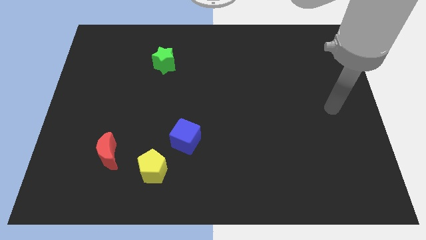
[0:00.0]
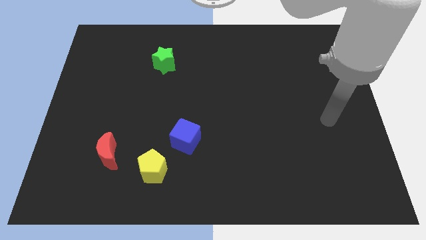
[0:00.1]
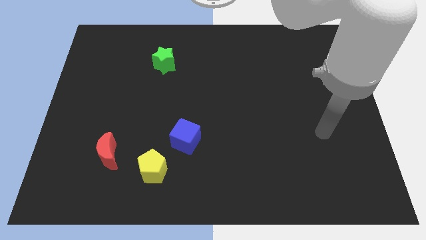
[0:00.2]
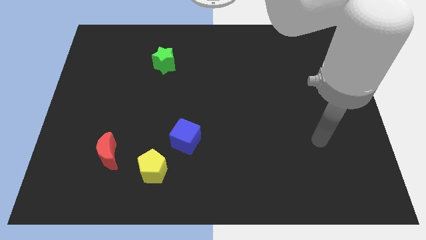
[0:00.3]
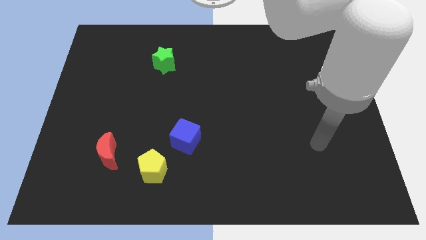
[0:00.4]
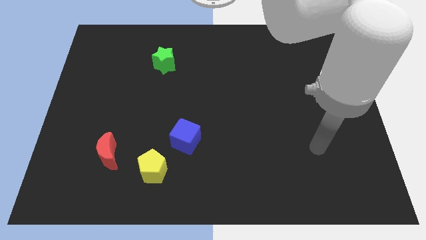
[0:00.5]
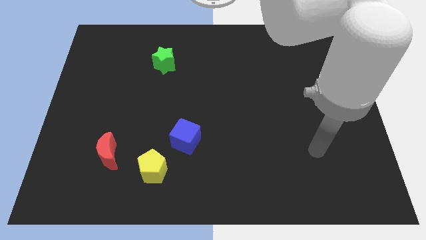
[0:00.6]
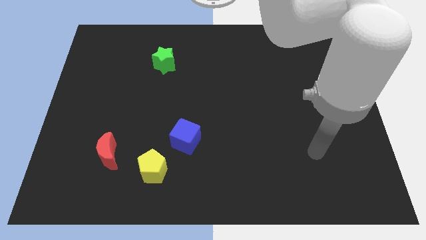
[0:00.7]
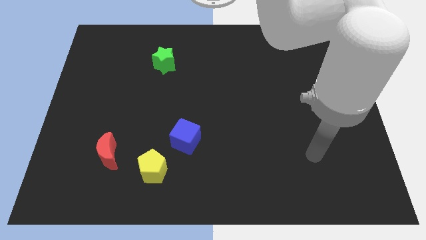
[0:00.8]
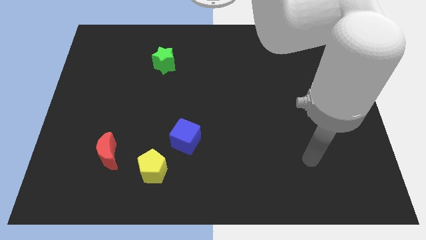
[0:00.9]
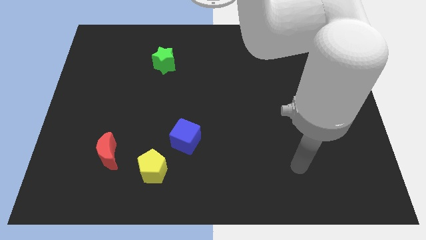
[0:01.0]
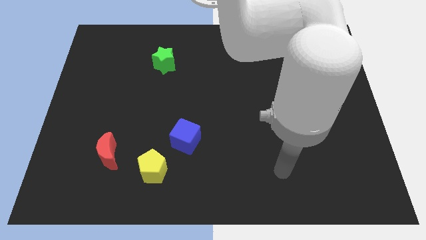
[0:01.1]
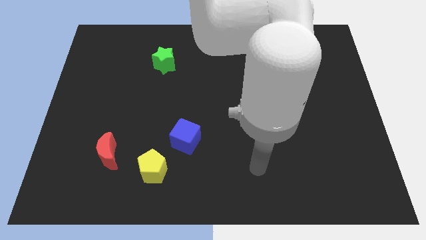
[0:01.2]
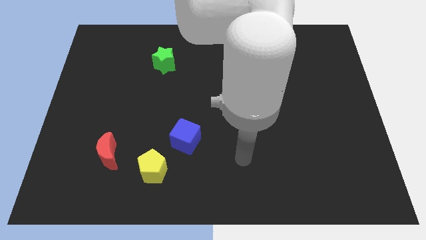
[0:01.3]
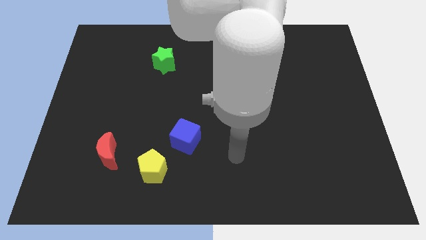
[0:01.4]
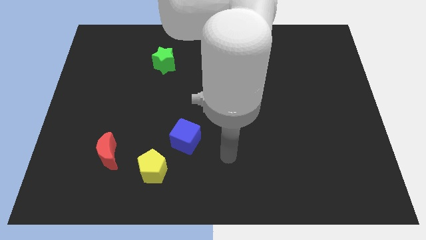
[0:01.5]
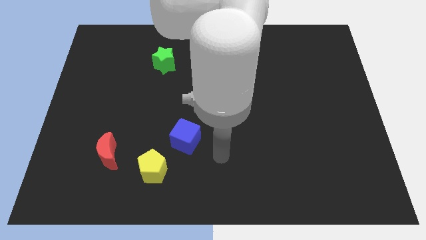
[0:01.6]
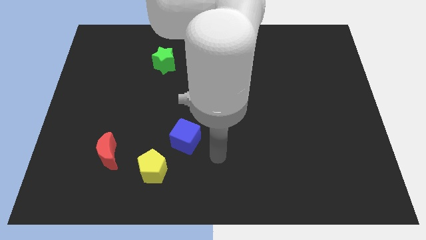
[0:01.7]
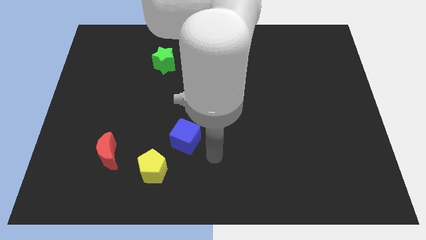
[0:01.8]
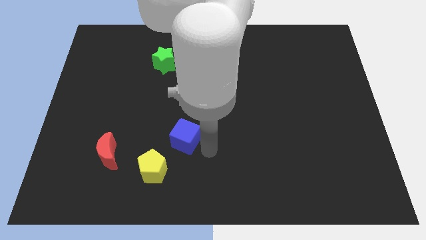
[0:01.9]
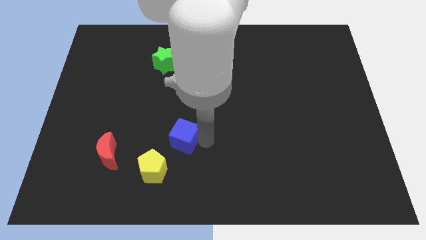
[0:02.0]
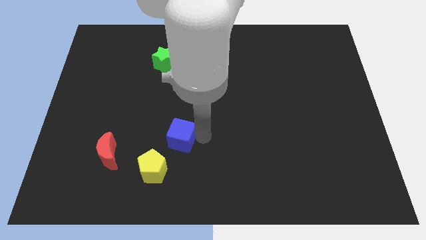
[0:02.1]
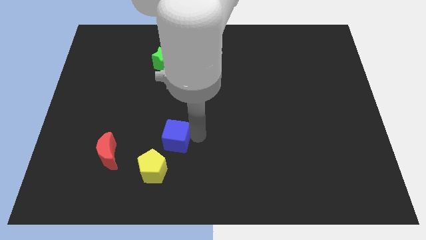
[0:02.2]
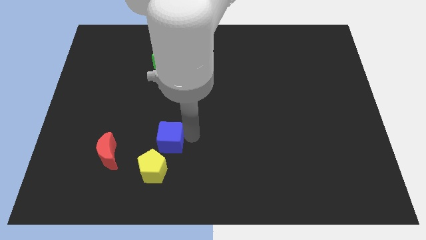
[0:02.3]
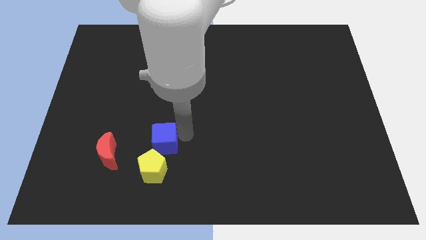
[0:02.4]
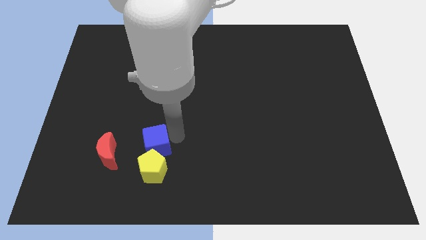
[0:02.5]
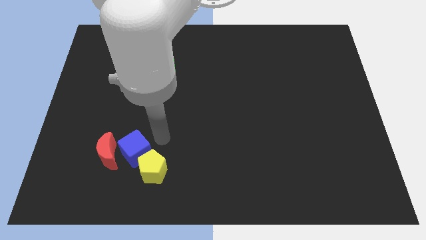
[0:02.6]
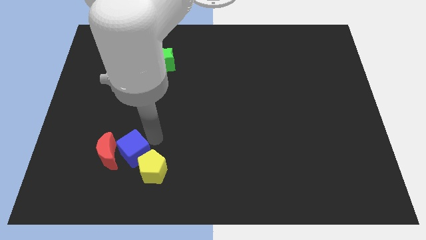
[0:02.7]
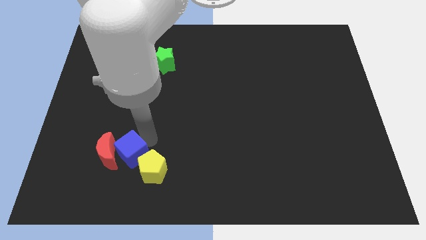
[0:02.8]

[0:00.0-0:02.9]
put the blue block close to the red moon

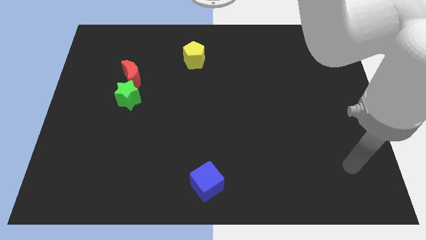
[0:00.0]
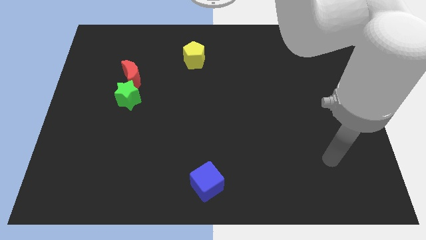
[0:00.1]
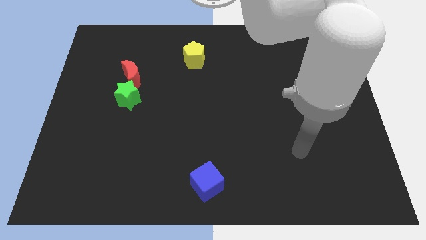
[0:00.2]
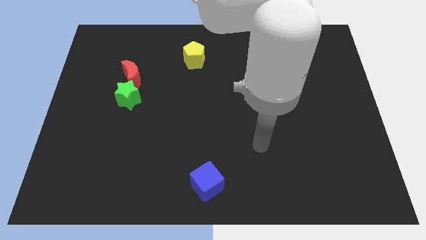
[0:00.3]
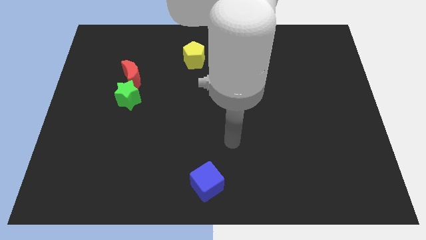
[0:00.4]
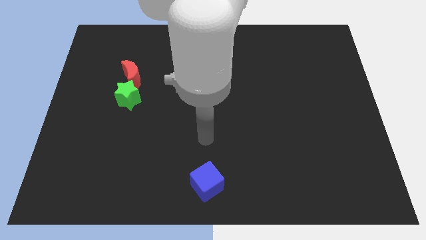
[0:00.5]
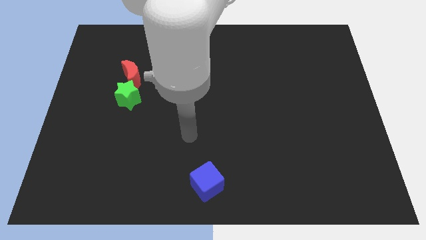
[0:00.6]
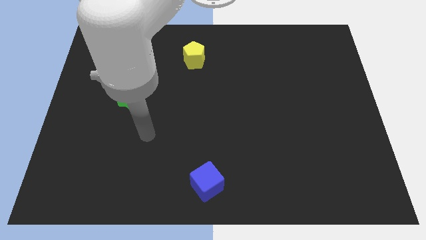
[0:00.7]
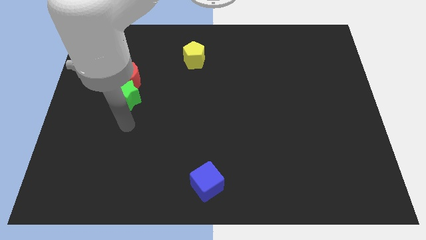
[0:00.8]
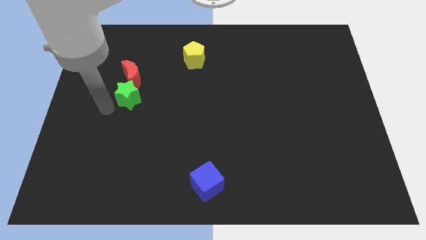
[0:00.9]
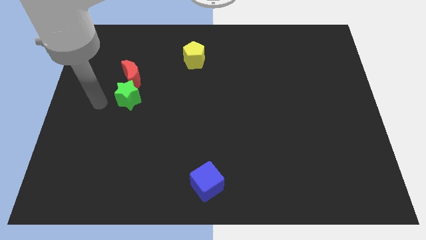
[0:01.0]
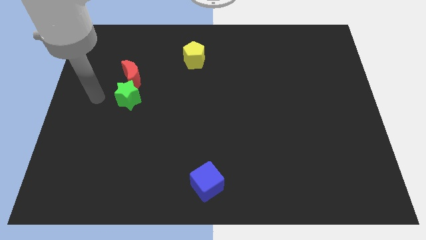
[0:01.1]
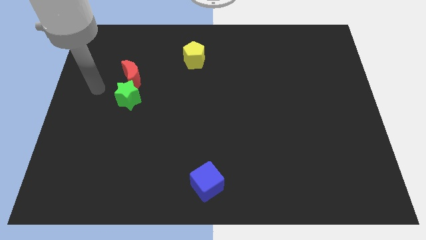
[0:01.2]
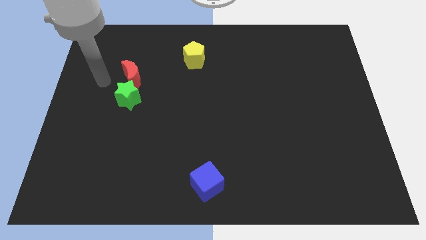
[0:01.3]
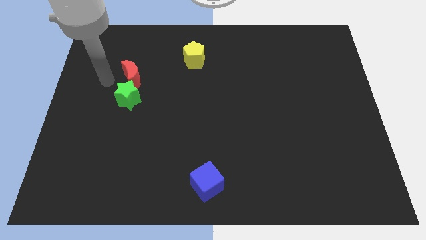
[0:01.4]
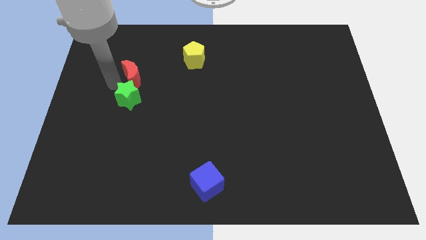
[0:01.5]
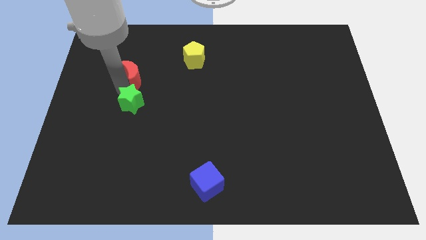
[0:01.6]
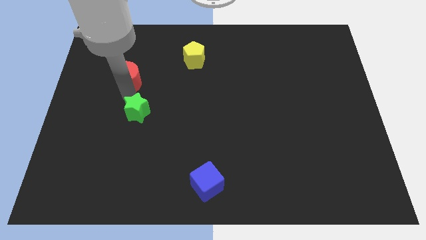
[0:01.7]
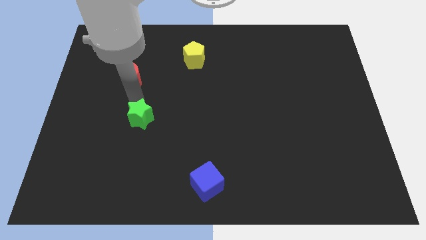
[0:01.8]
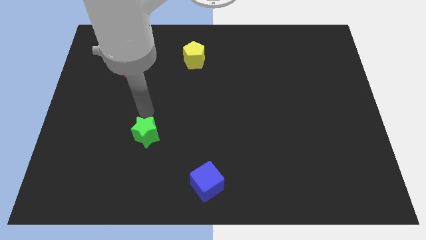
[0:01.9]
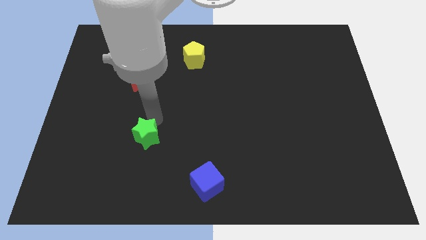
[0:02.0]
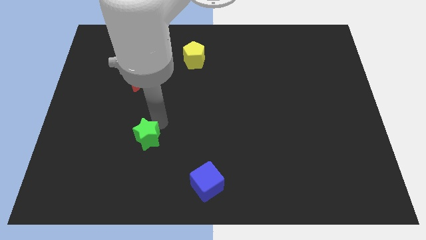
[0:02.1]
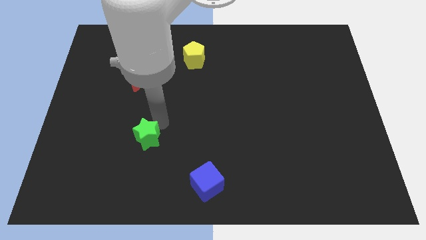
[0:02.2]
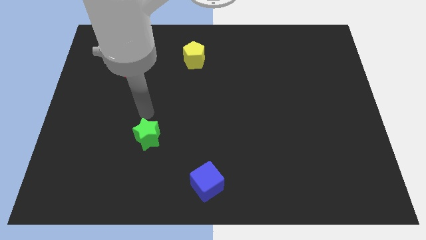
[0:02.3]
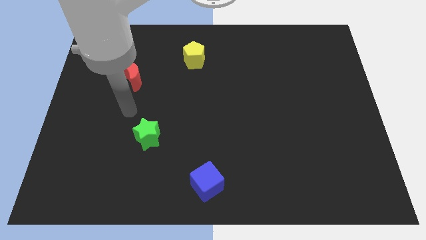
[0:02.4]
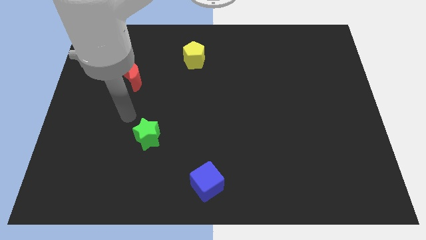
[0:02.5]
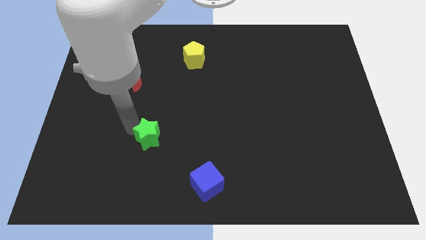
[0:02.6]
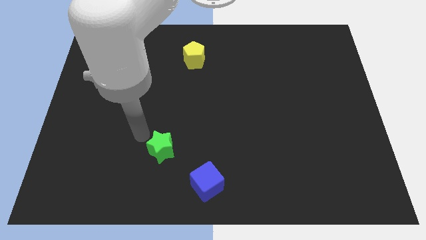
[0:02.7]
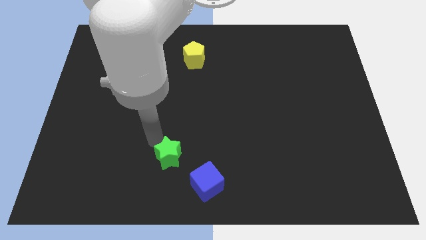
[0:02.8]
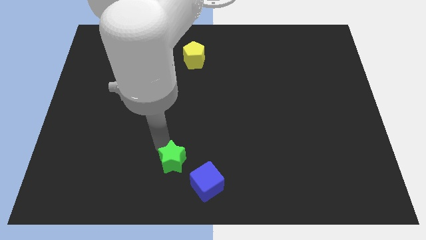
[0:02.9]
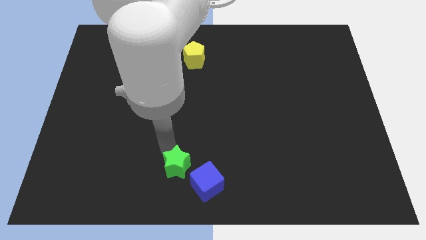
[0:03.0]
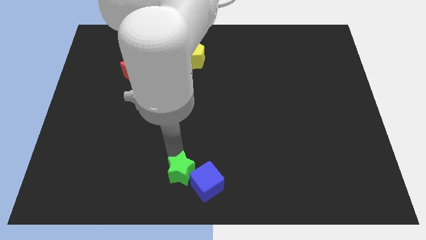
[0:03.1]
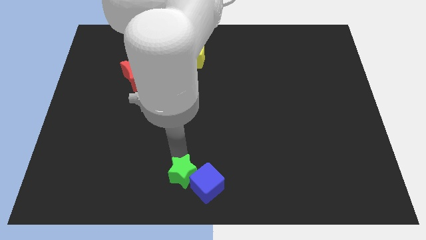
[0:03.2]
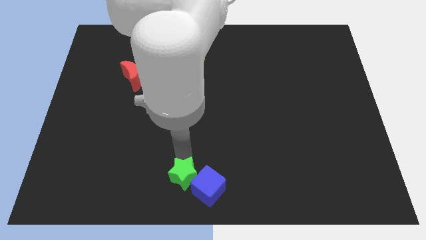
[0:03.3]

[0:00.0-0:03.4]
move the green block next to the blue block

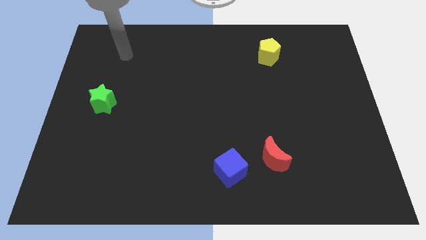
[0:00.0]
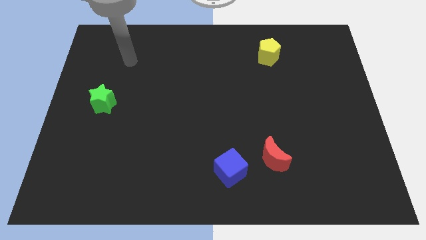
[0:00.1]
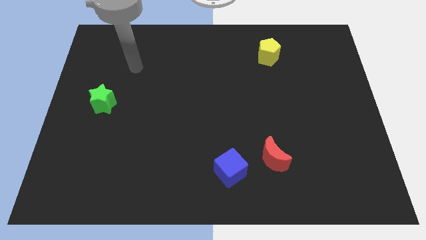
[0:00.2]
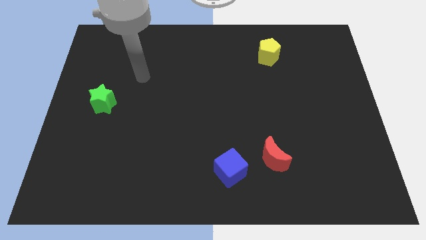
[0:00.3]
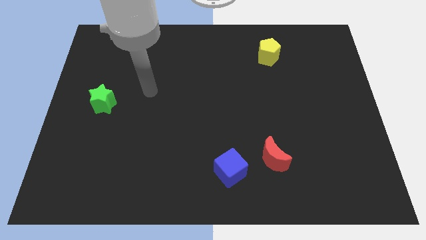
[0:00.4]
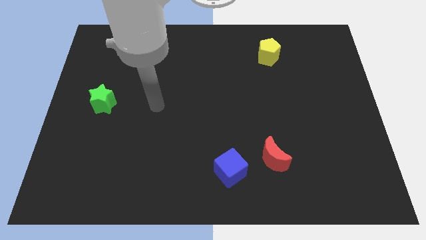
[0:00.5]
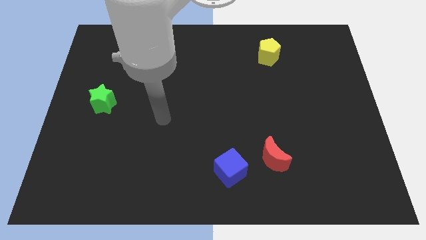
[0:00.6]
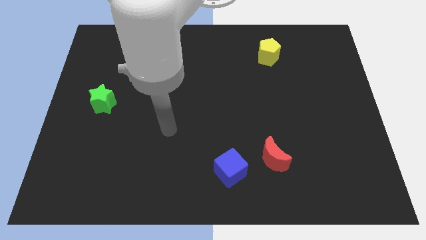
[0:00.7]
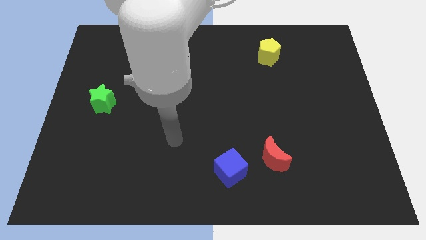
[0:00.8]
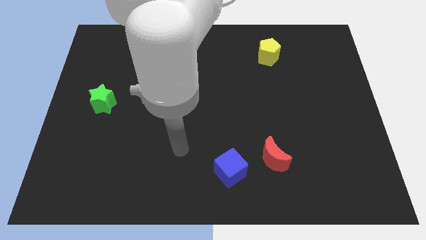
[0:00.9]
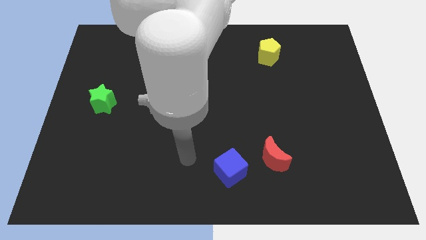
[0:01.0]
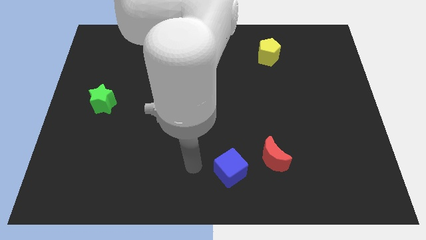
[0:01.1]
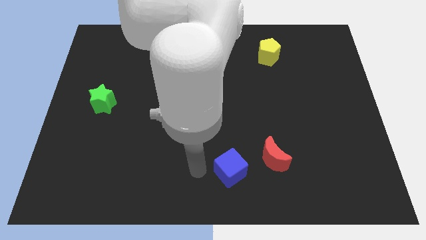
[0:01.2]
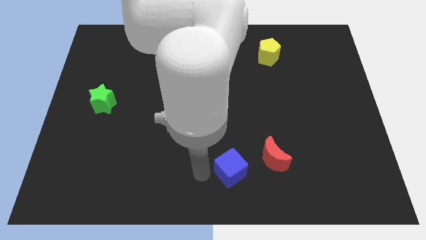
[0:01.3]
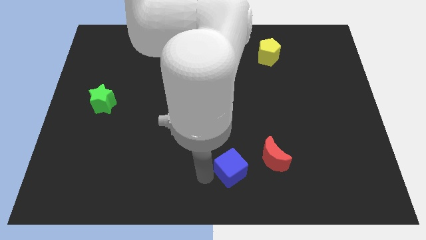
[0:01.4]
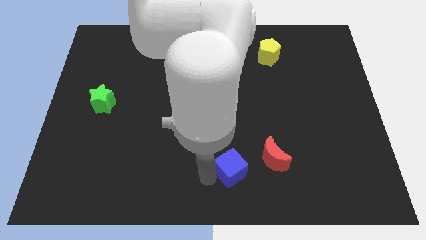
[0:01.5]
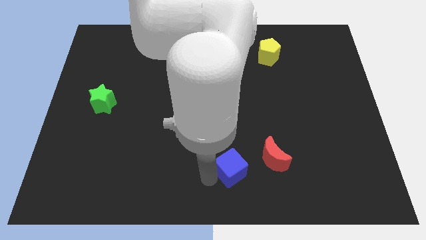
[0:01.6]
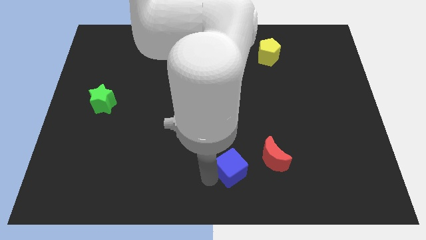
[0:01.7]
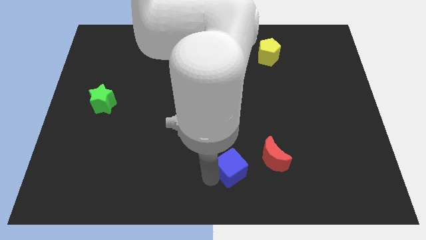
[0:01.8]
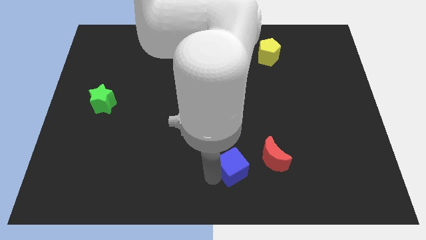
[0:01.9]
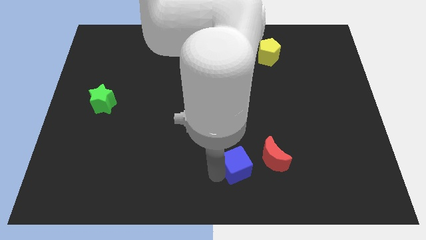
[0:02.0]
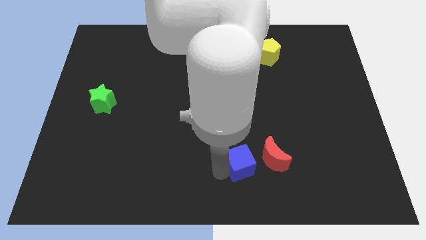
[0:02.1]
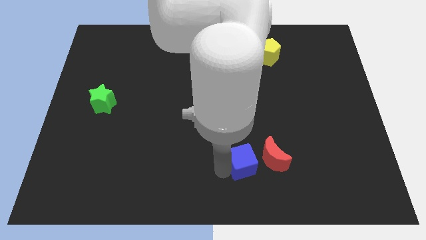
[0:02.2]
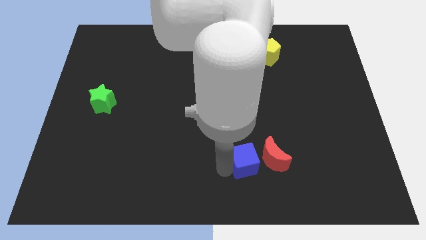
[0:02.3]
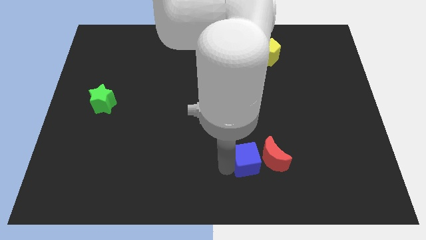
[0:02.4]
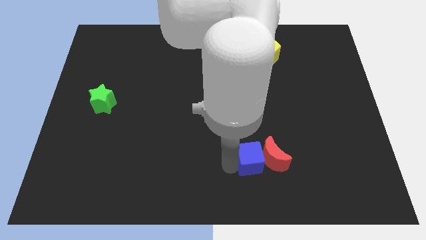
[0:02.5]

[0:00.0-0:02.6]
put the cube next to the moon
